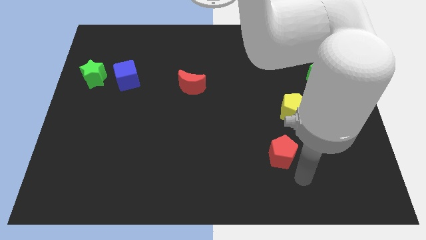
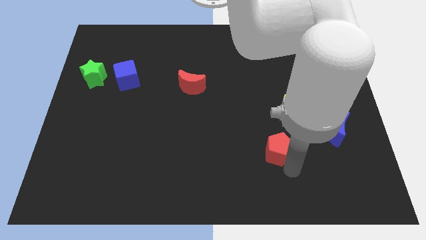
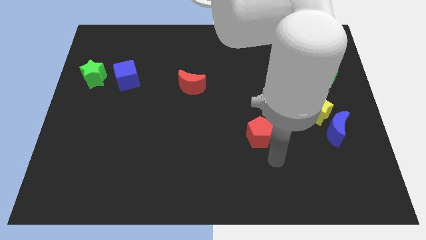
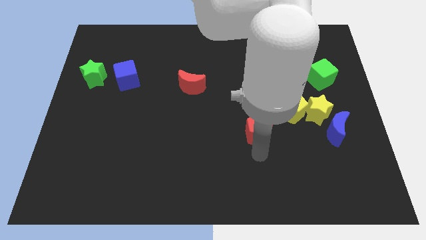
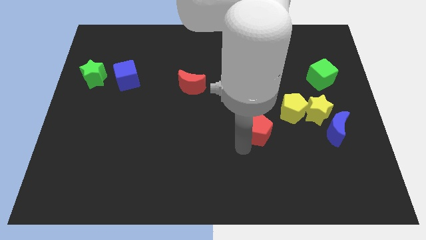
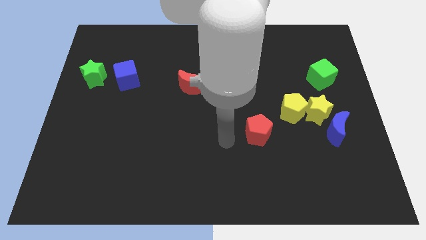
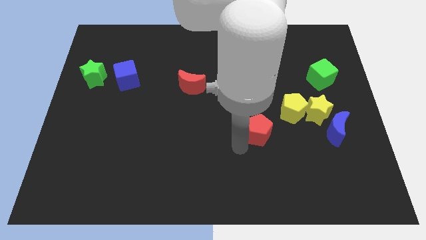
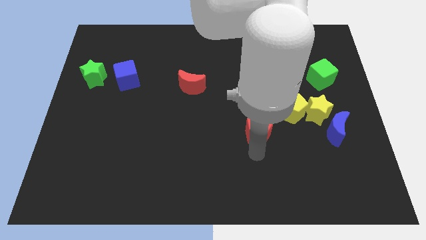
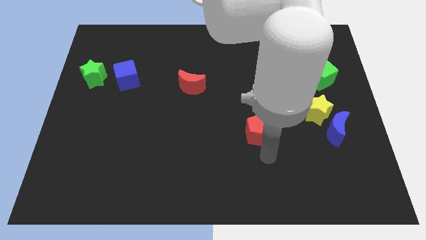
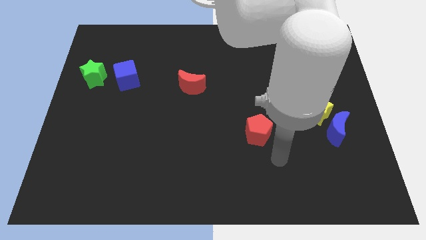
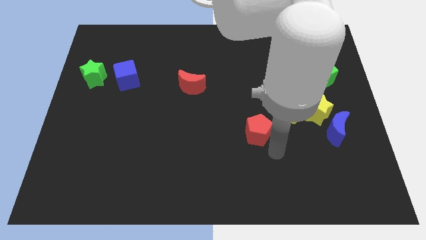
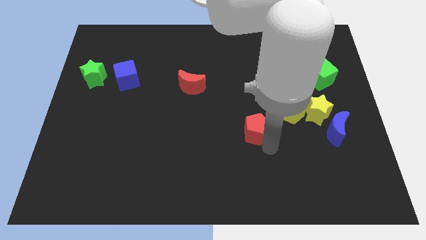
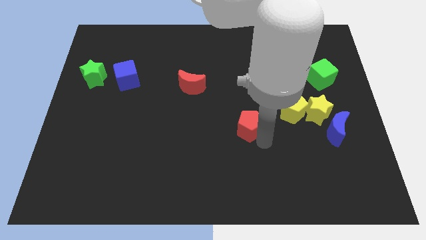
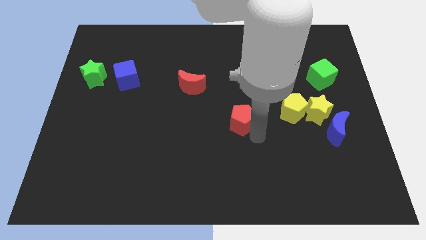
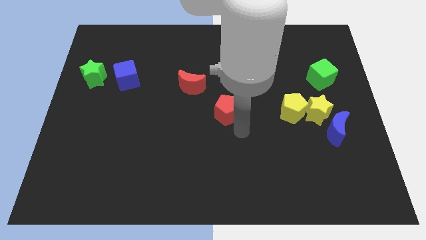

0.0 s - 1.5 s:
move red pentagon right below the red moon

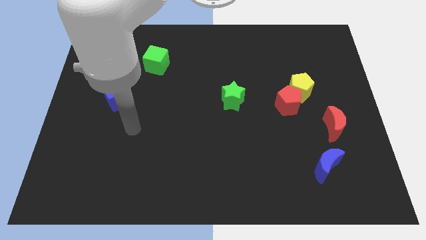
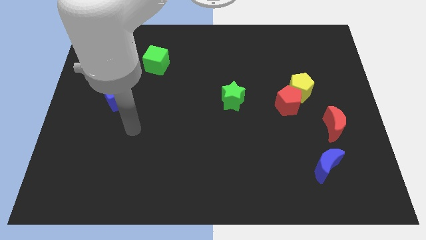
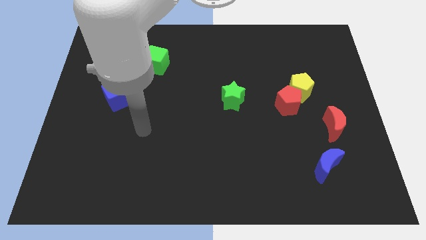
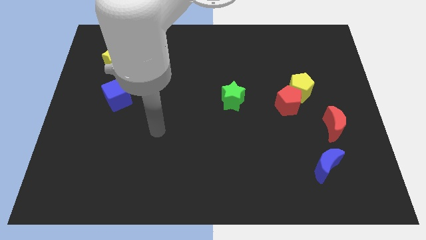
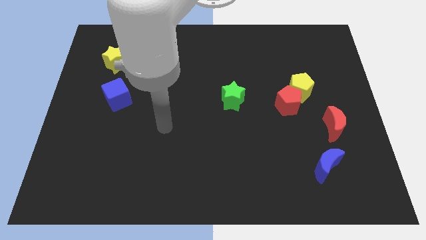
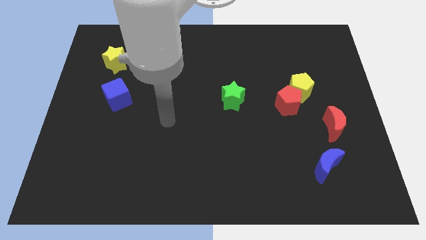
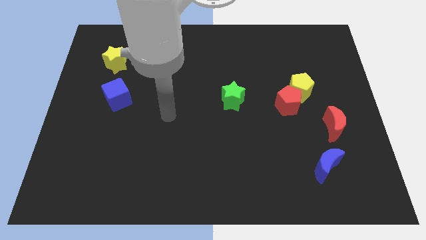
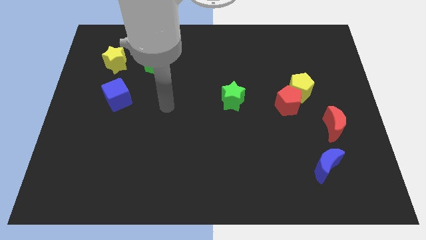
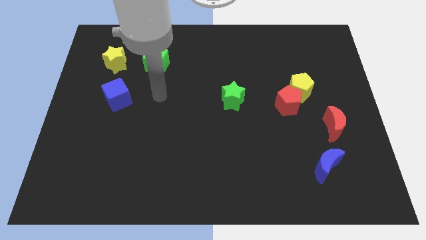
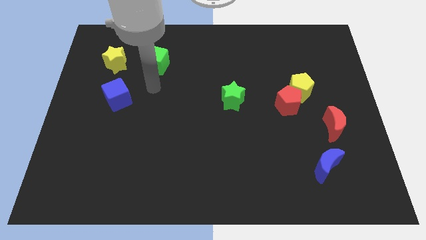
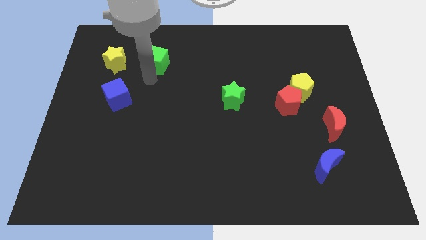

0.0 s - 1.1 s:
place the arm down to the green cube

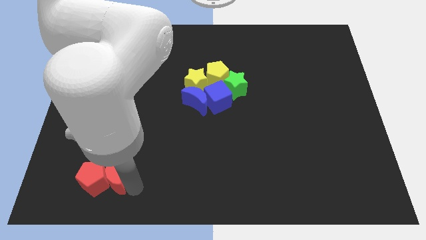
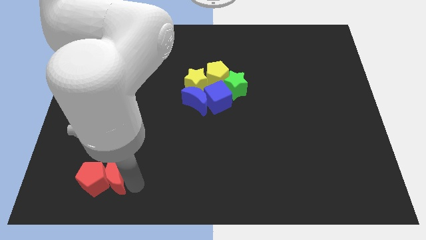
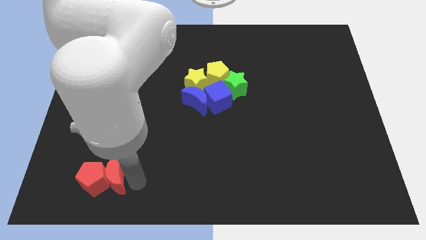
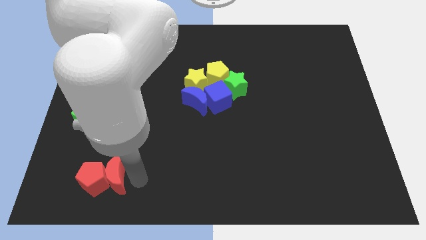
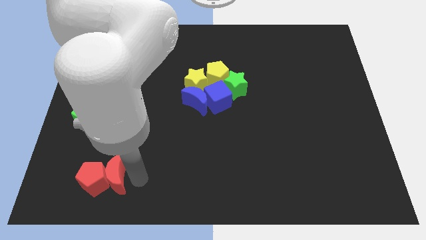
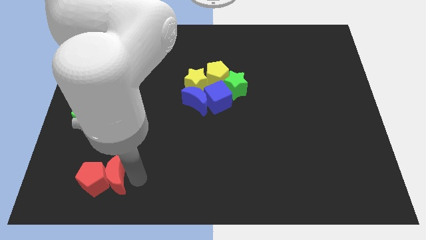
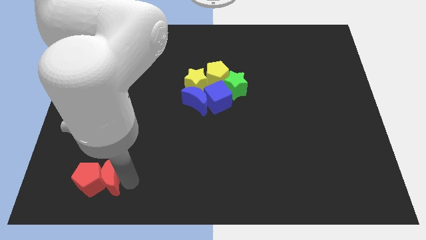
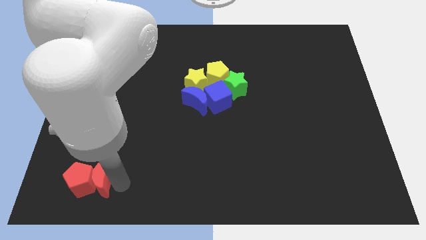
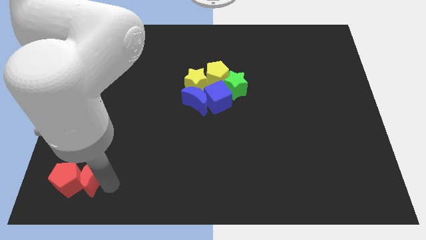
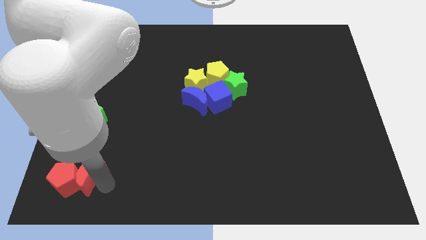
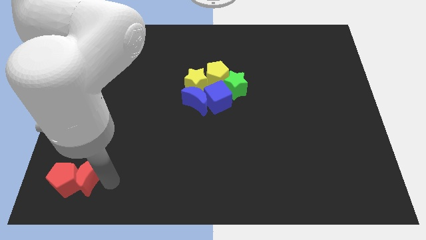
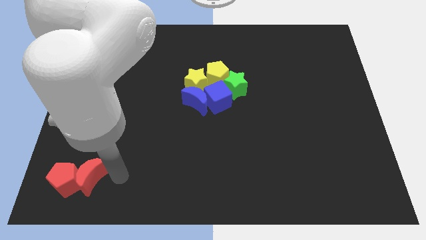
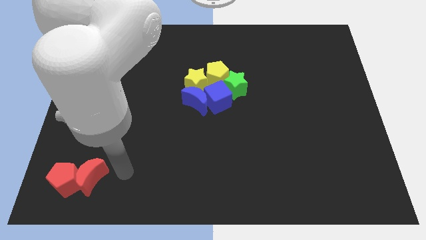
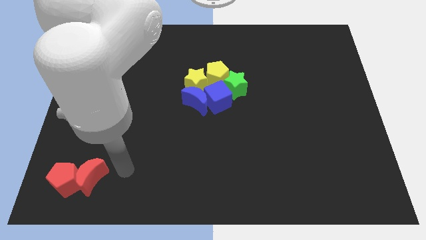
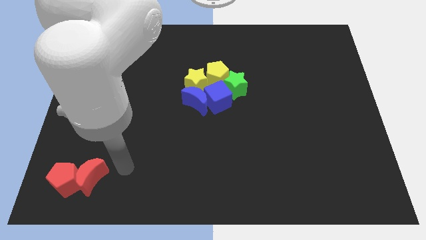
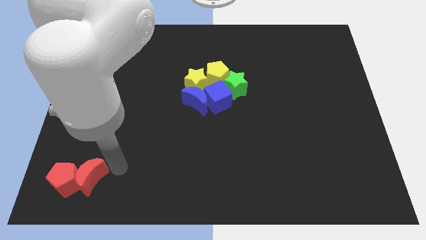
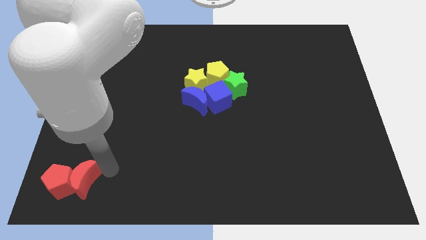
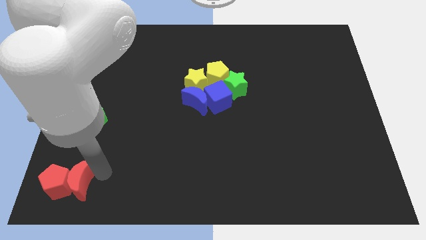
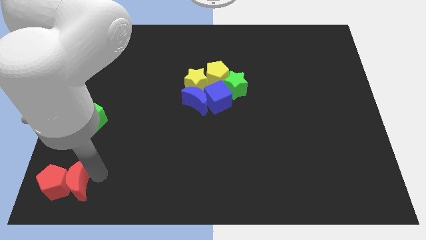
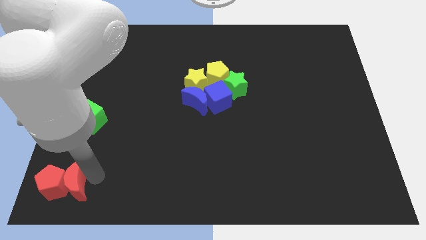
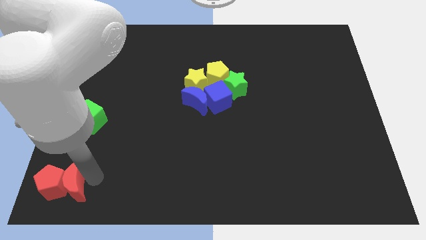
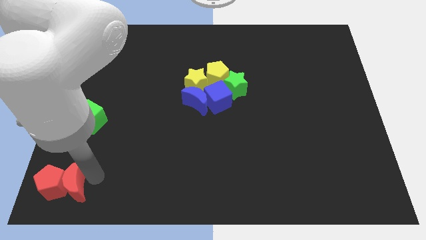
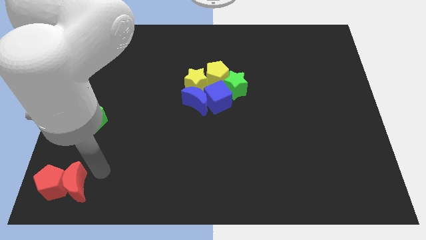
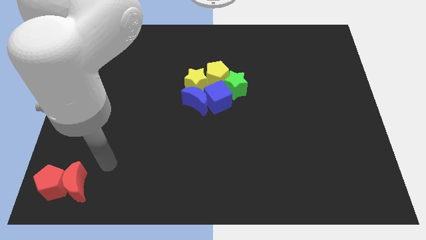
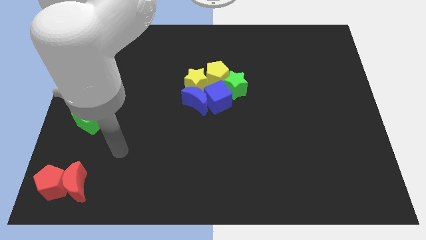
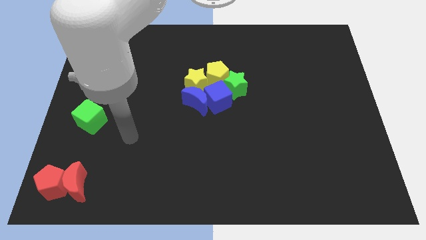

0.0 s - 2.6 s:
move the red blocks to the bottom left corner

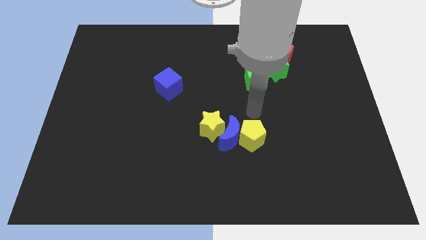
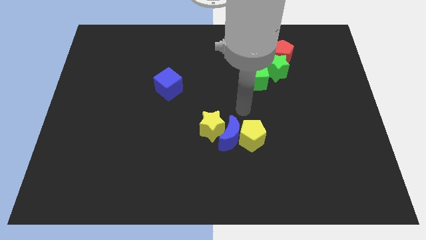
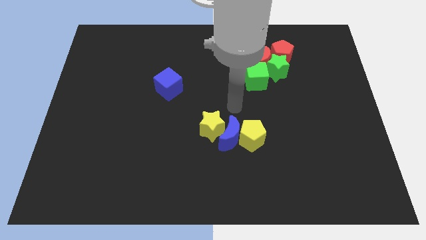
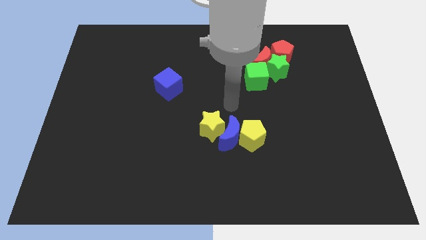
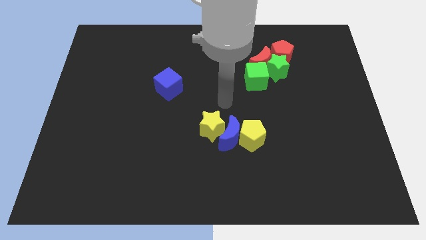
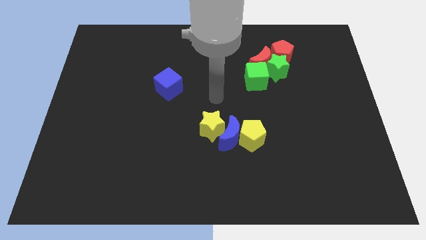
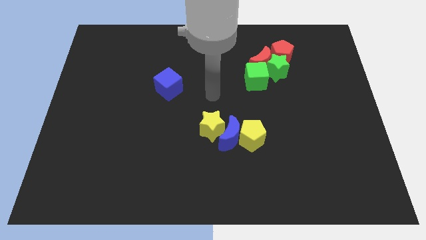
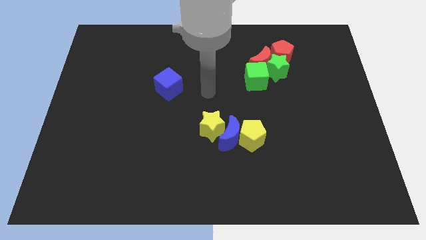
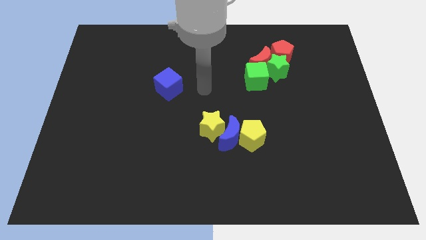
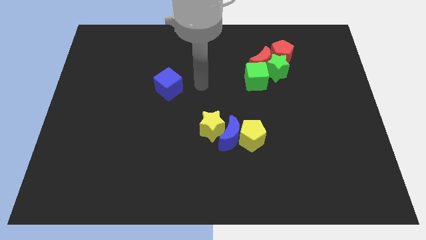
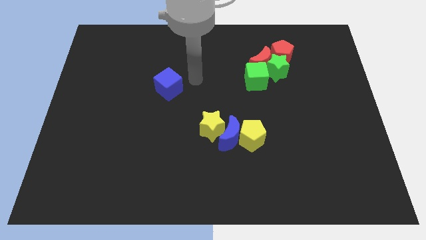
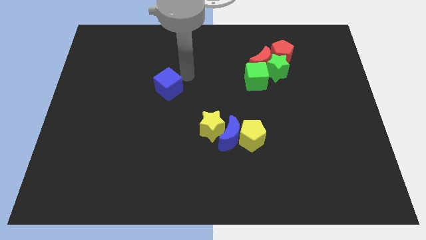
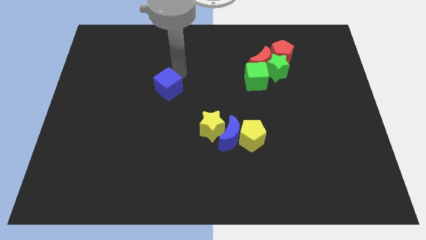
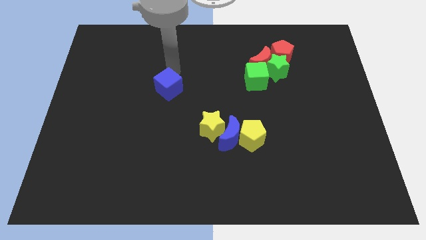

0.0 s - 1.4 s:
point your arm above blue cube

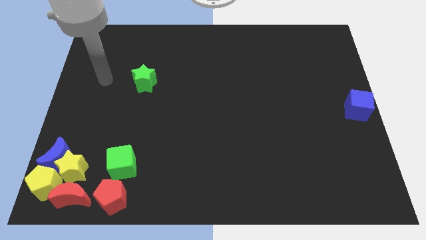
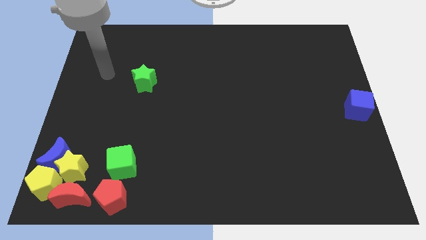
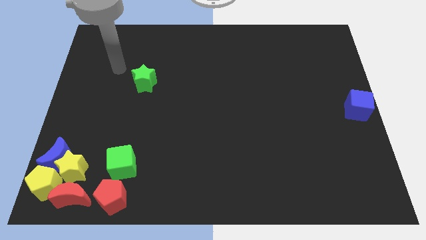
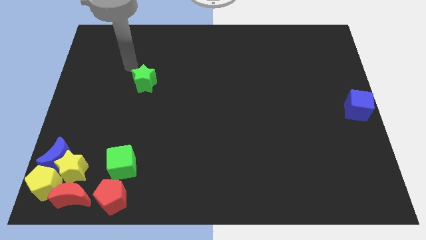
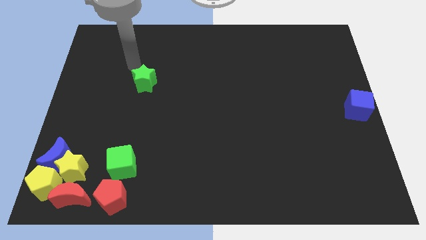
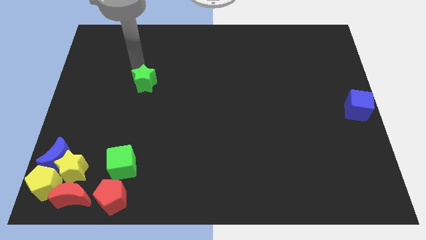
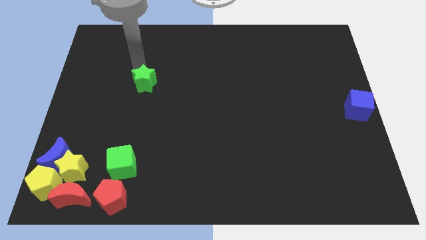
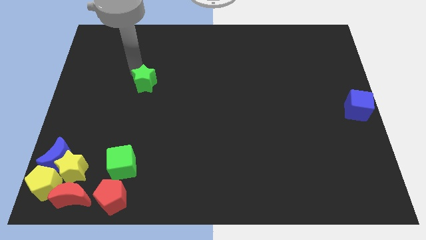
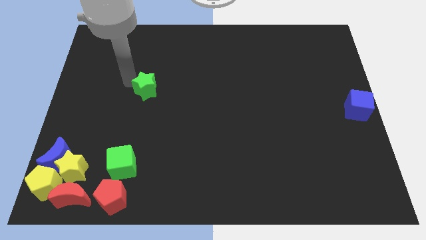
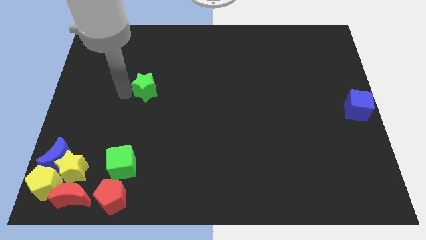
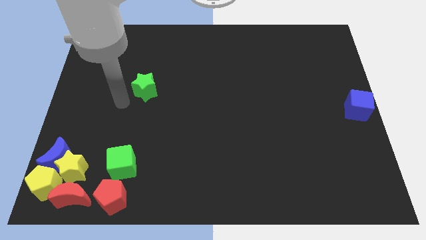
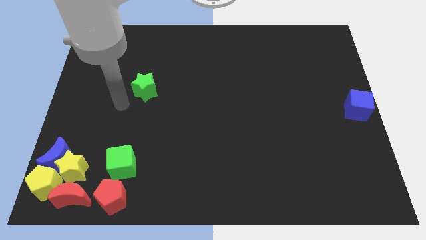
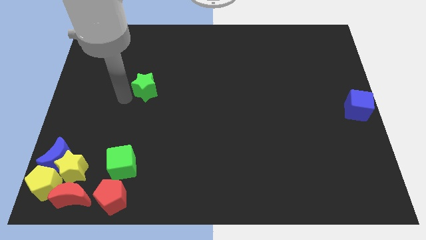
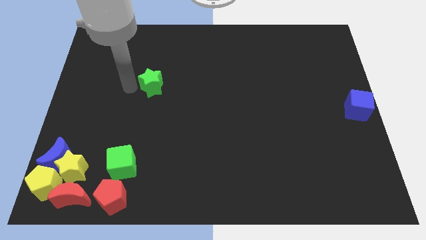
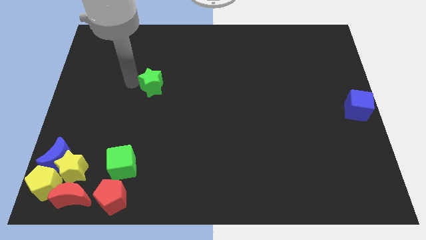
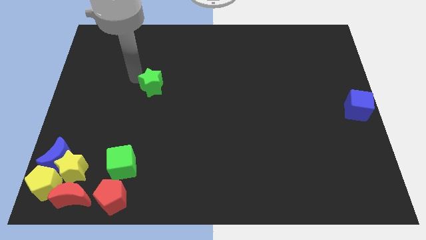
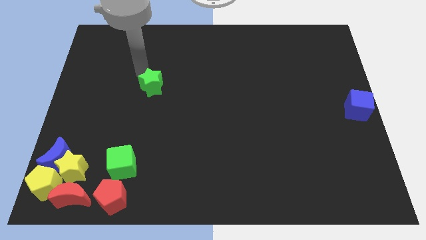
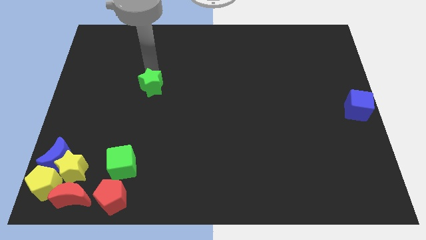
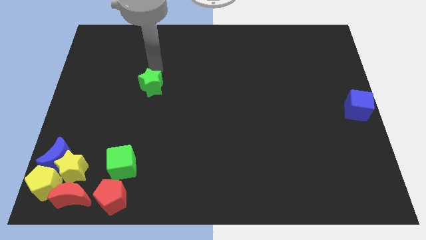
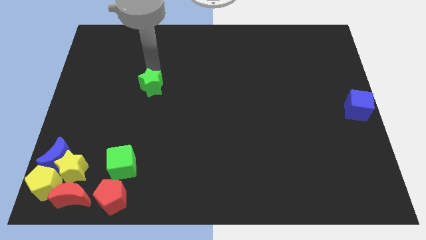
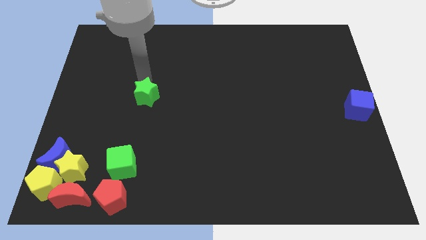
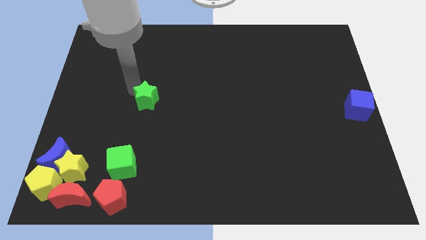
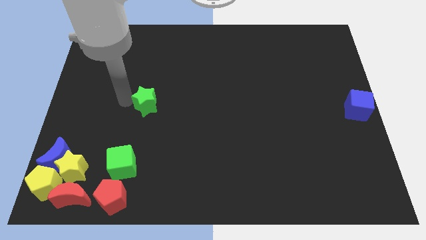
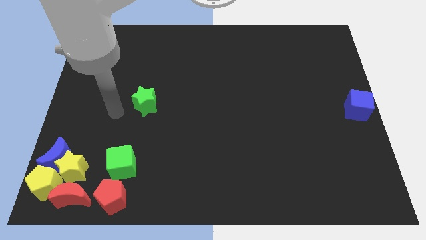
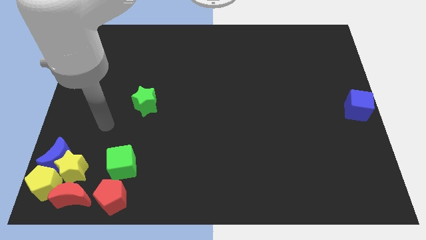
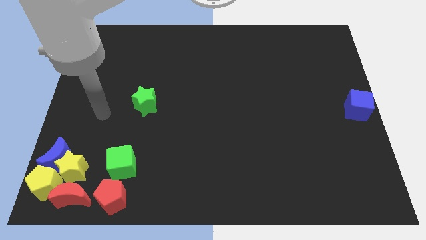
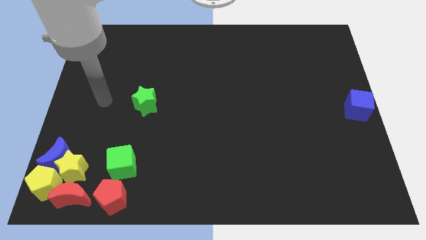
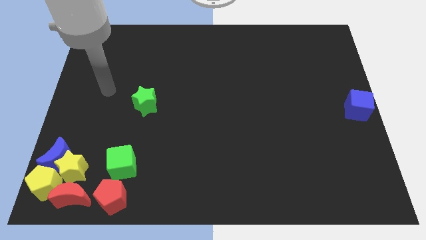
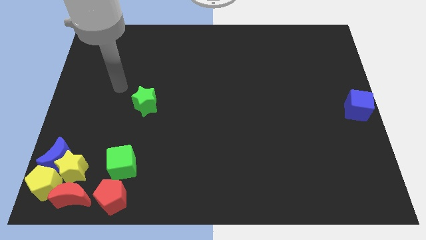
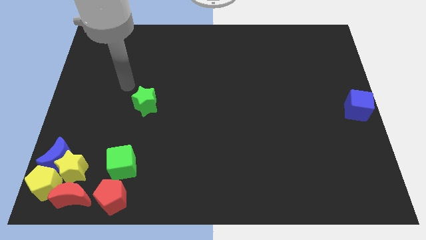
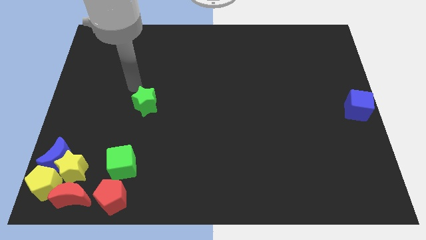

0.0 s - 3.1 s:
push the green star to the horizontal left of the blue cube
